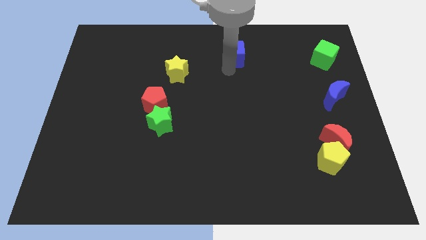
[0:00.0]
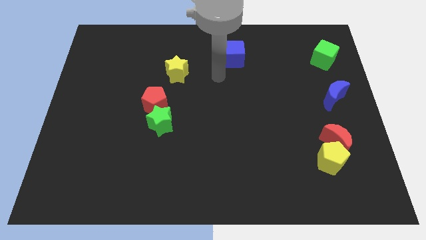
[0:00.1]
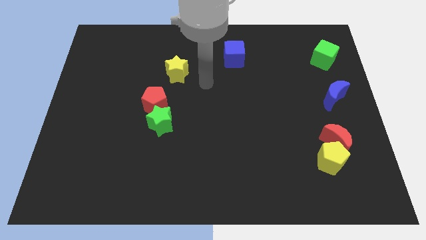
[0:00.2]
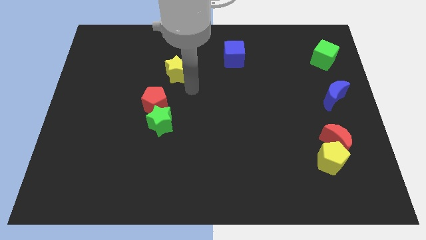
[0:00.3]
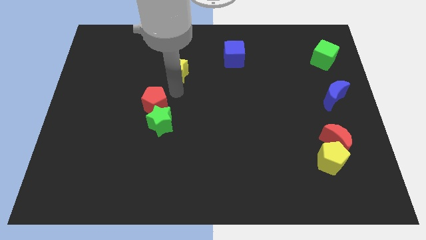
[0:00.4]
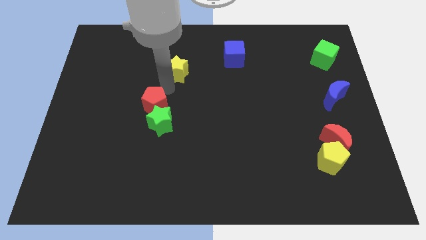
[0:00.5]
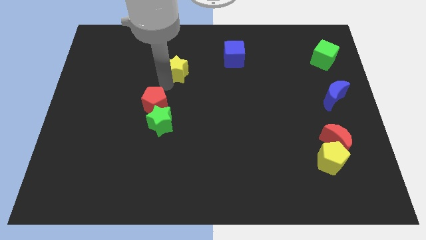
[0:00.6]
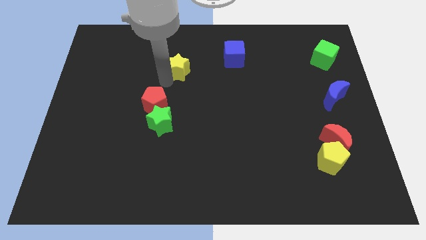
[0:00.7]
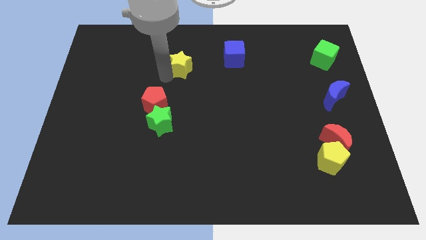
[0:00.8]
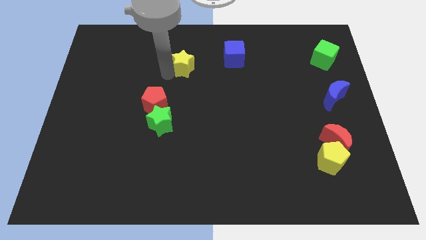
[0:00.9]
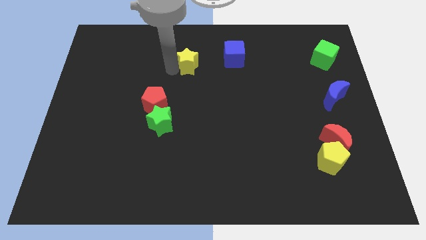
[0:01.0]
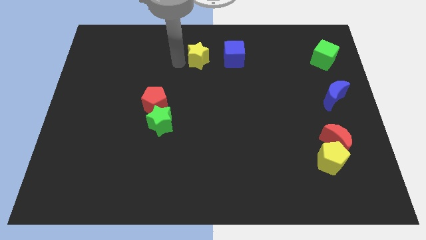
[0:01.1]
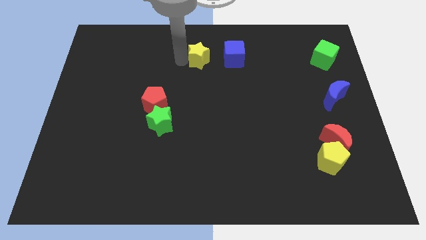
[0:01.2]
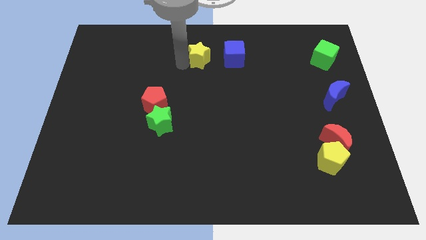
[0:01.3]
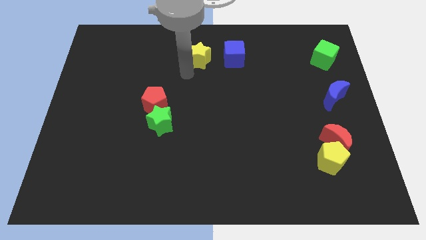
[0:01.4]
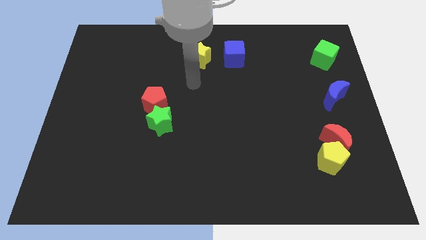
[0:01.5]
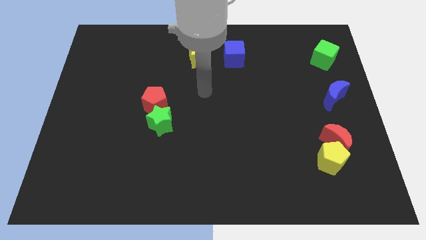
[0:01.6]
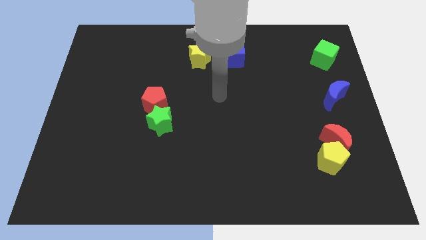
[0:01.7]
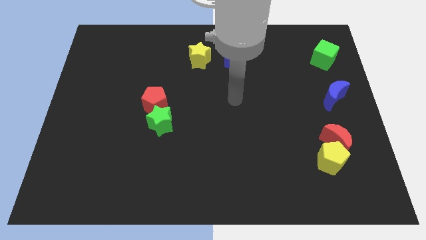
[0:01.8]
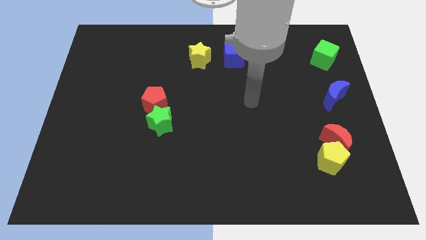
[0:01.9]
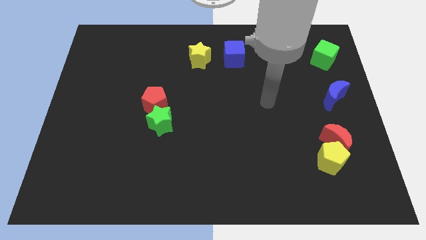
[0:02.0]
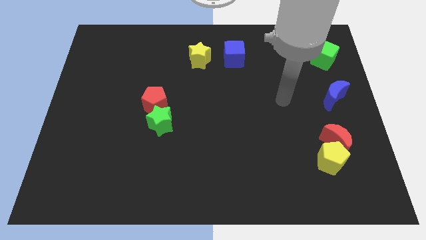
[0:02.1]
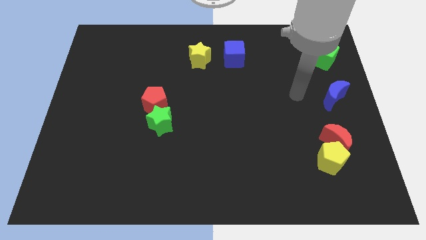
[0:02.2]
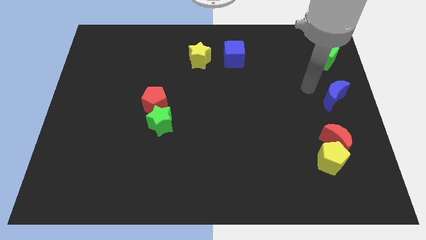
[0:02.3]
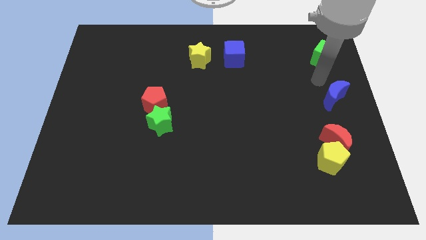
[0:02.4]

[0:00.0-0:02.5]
place the yellow star left to the blue cube

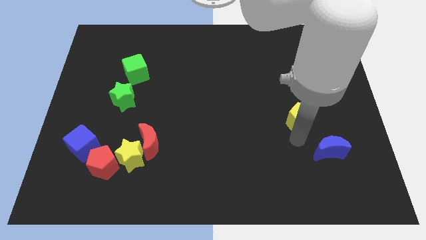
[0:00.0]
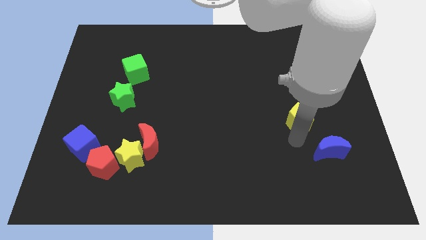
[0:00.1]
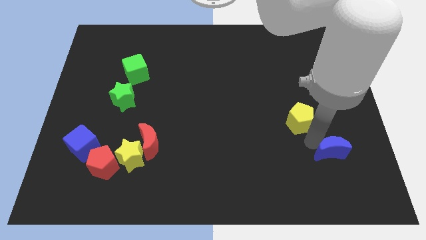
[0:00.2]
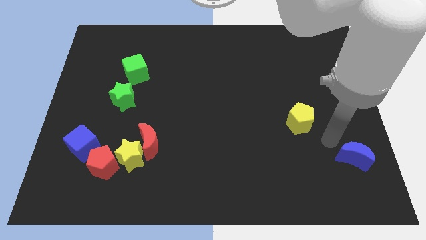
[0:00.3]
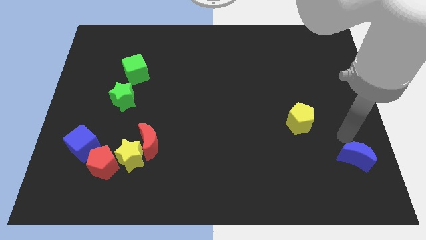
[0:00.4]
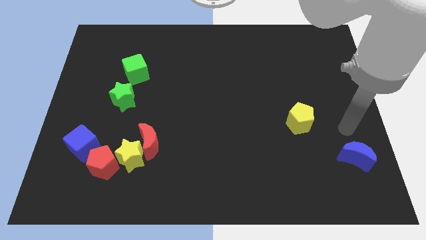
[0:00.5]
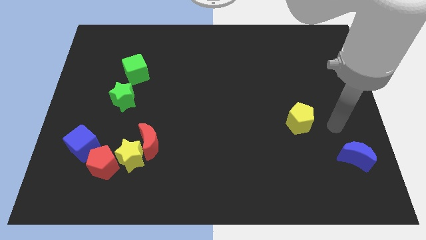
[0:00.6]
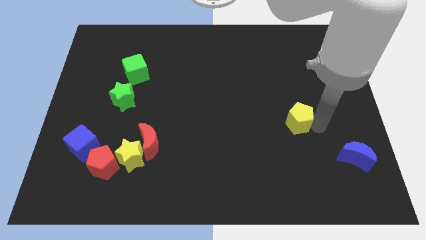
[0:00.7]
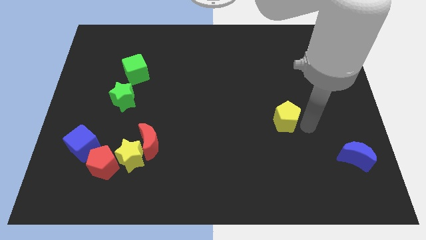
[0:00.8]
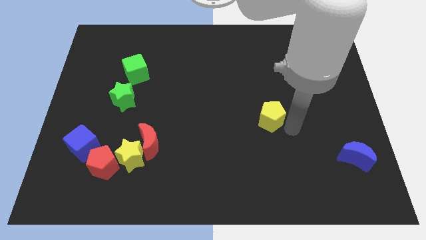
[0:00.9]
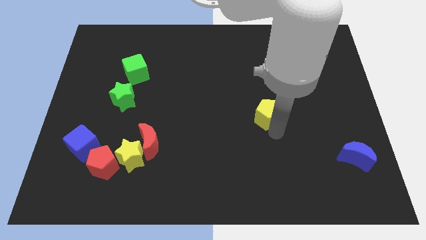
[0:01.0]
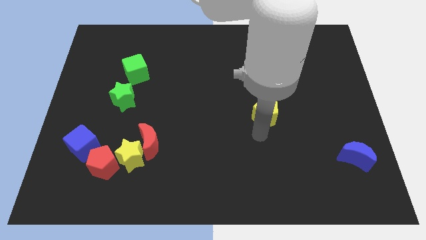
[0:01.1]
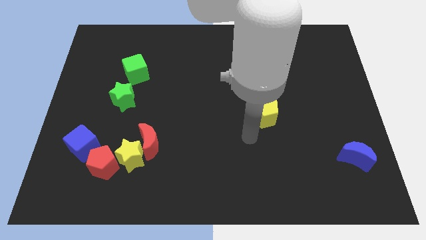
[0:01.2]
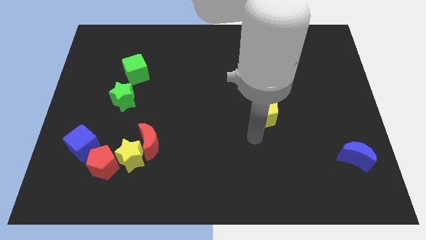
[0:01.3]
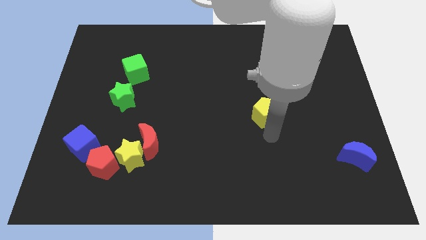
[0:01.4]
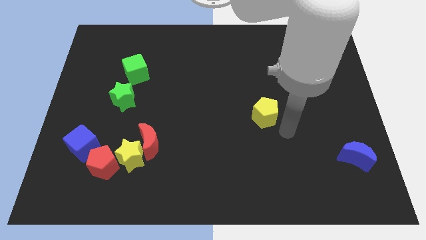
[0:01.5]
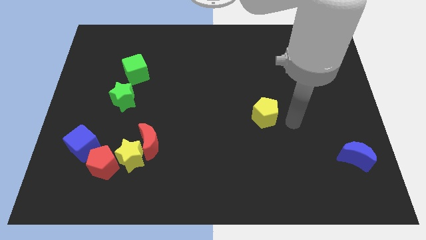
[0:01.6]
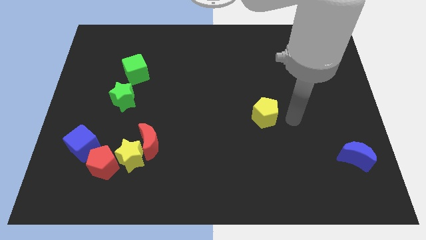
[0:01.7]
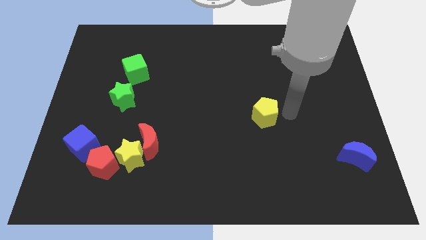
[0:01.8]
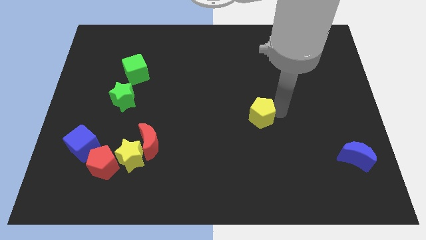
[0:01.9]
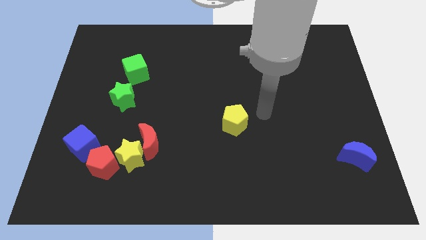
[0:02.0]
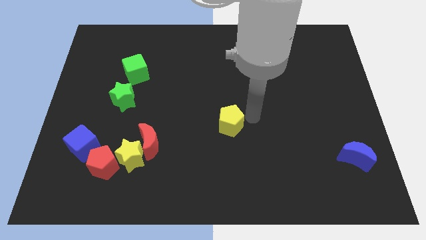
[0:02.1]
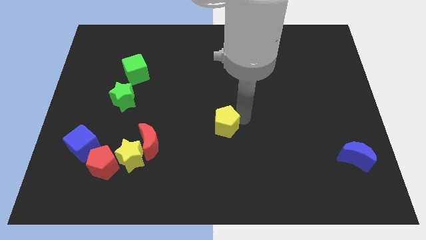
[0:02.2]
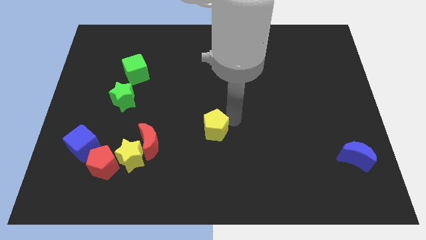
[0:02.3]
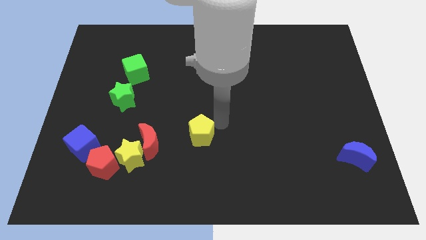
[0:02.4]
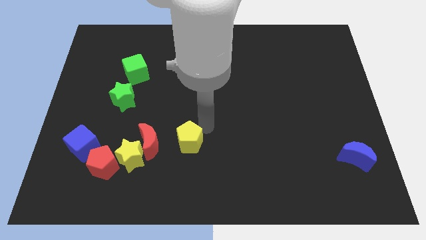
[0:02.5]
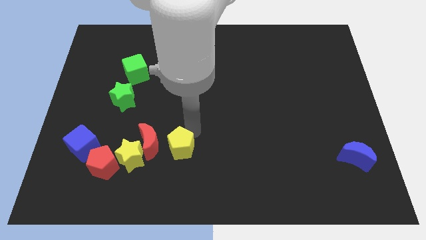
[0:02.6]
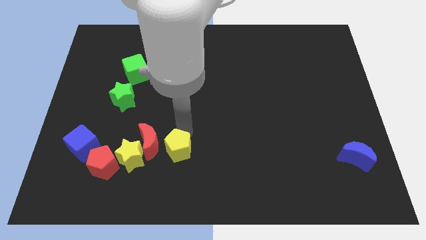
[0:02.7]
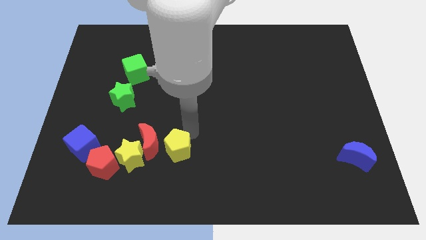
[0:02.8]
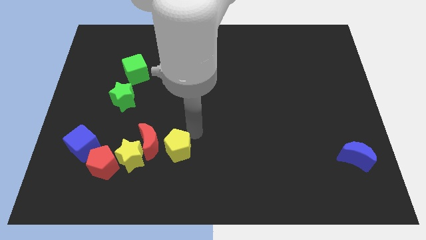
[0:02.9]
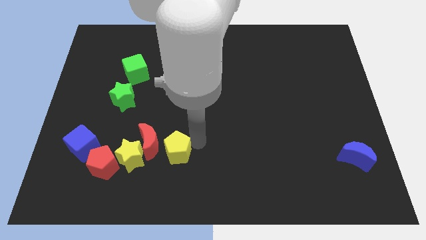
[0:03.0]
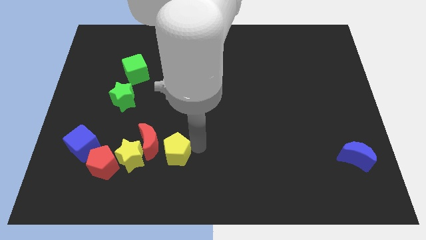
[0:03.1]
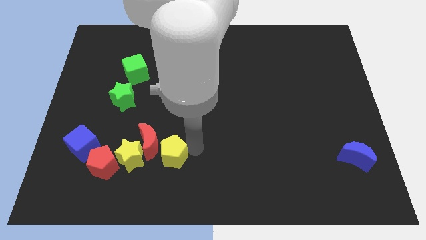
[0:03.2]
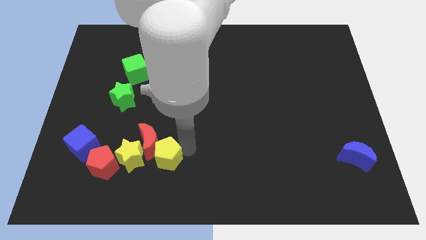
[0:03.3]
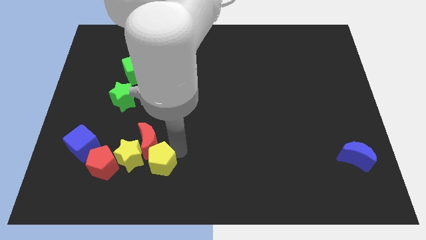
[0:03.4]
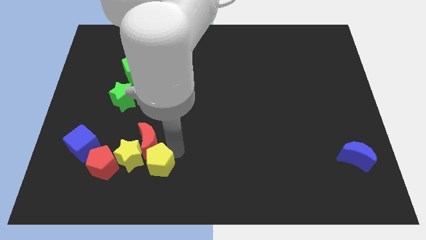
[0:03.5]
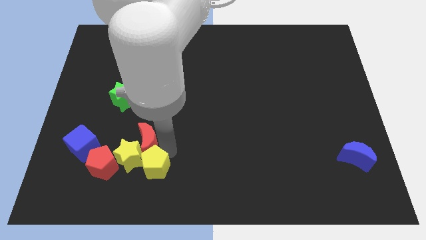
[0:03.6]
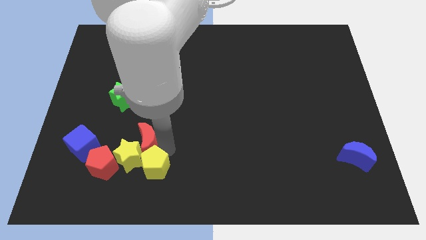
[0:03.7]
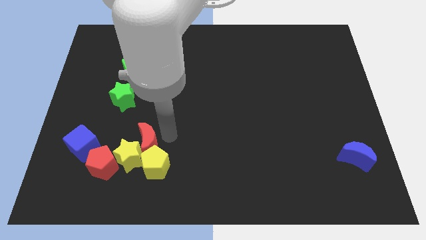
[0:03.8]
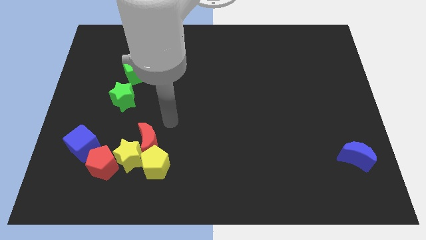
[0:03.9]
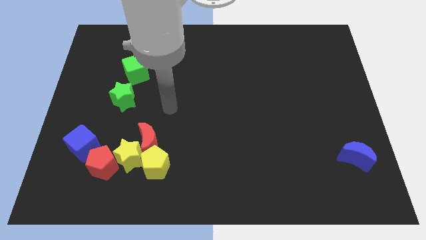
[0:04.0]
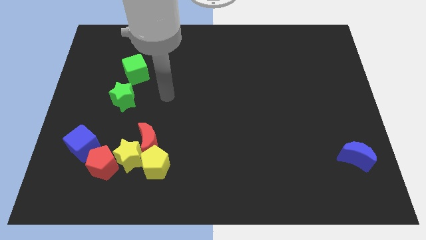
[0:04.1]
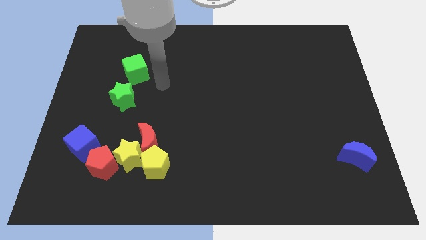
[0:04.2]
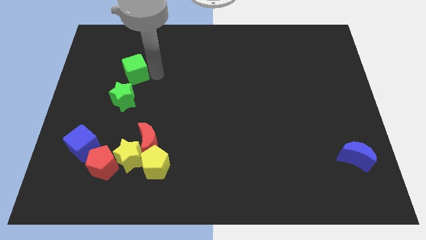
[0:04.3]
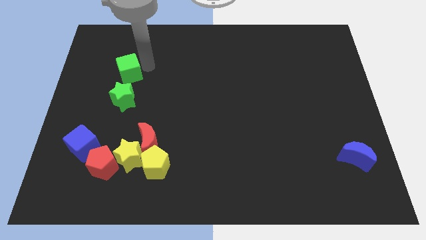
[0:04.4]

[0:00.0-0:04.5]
push the yellow pentagon into the line of blocks

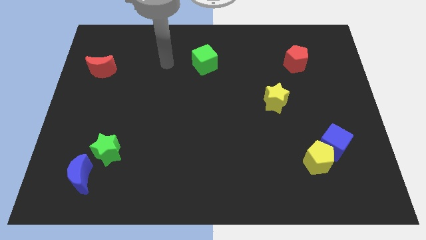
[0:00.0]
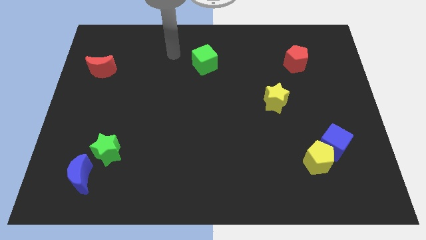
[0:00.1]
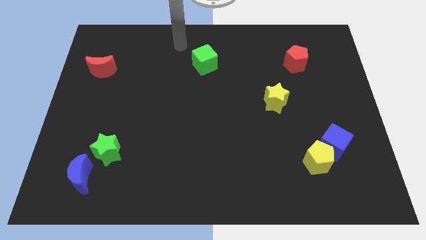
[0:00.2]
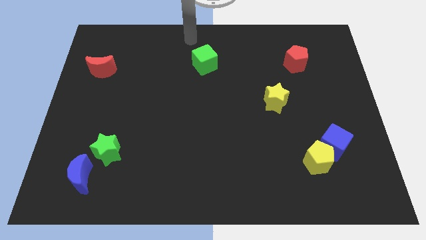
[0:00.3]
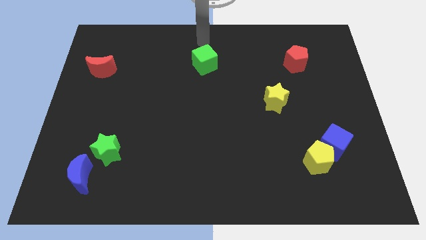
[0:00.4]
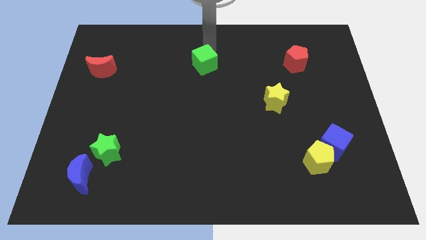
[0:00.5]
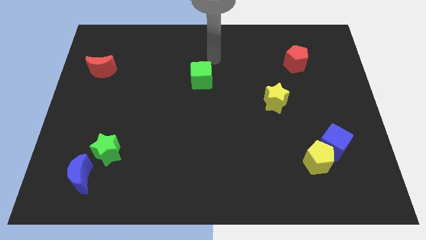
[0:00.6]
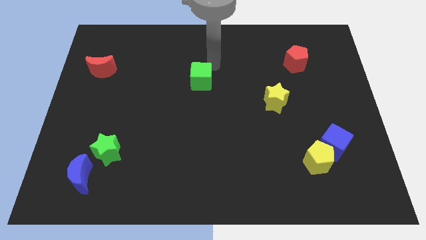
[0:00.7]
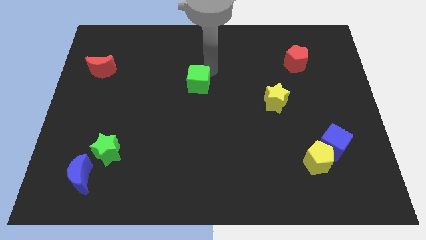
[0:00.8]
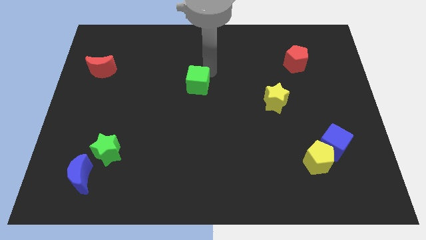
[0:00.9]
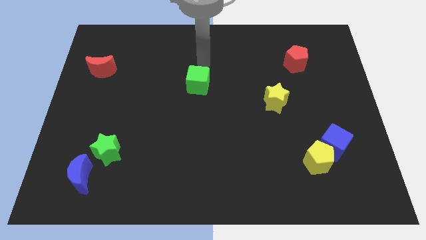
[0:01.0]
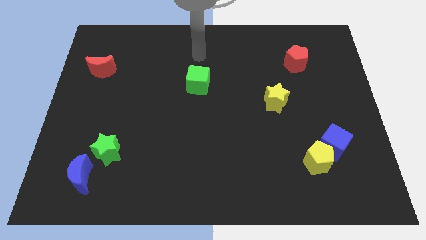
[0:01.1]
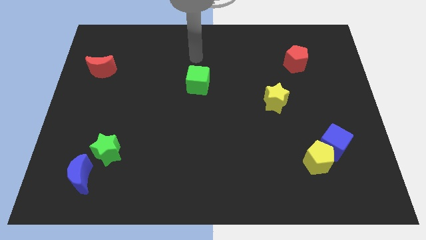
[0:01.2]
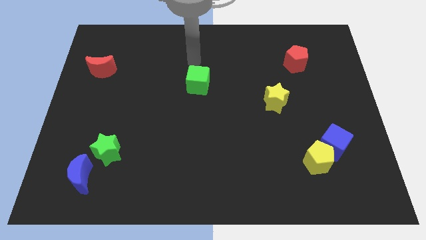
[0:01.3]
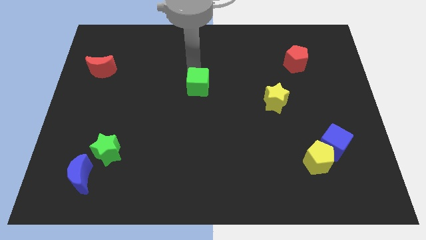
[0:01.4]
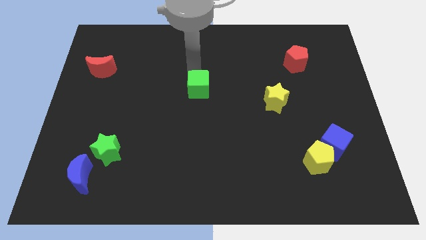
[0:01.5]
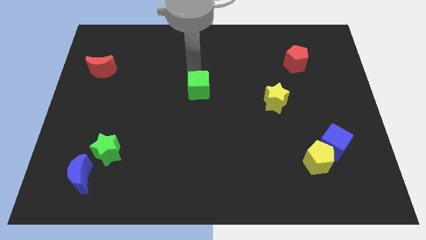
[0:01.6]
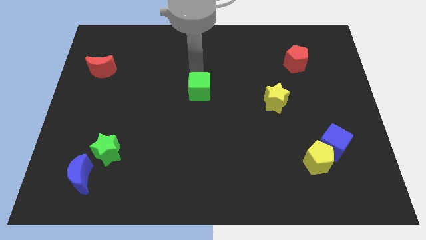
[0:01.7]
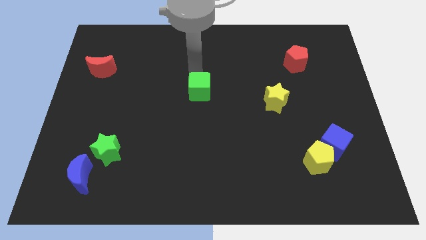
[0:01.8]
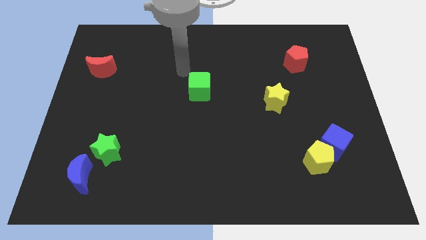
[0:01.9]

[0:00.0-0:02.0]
move the green cube to center of the board

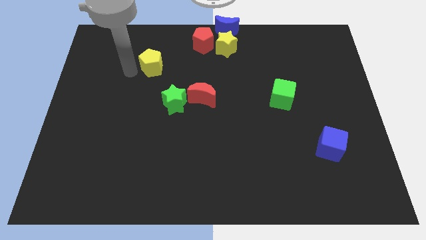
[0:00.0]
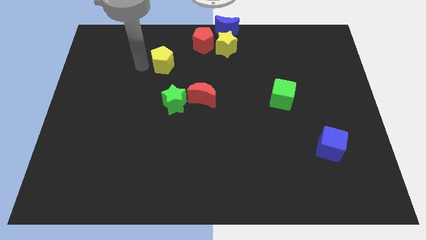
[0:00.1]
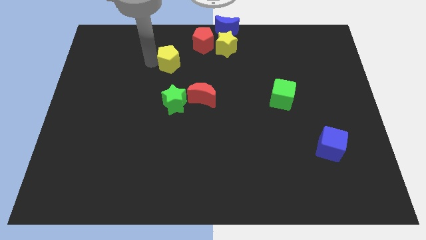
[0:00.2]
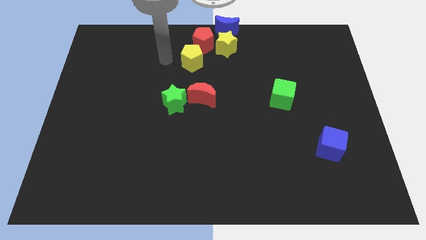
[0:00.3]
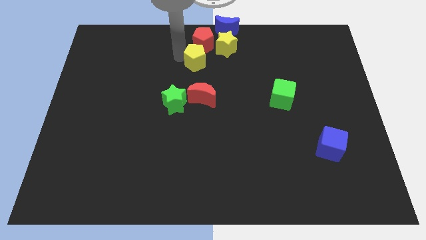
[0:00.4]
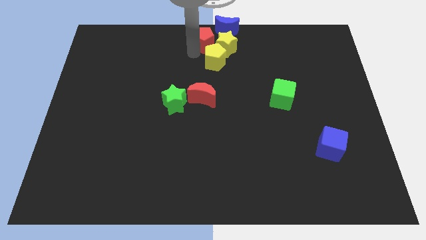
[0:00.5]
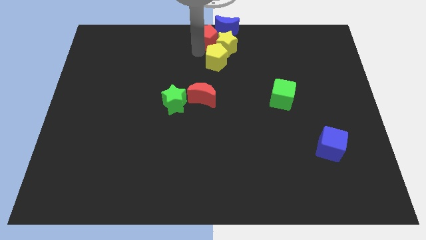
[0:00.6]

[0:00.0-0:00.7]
place the yellow pentagon diagonally top right of the yellow star
